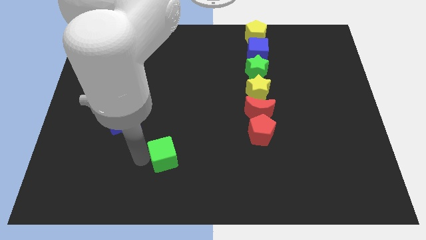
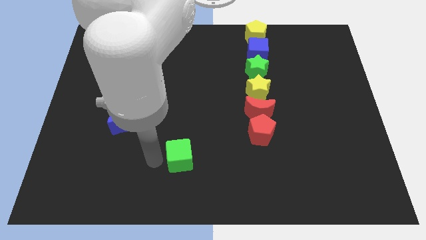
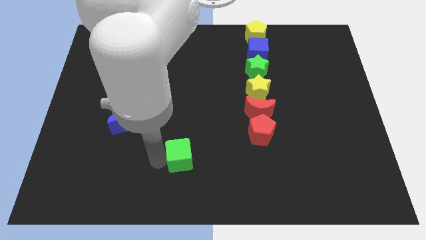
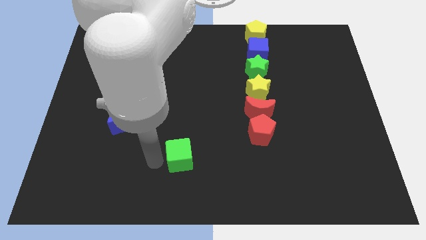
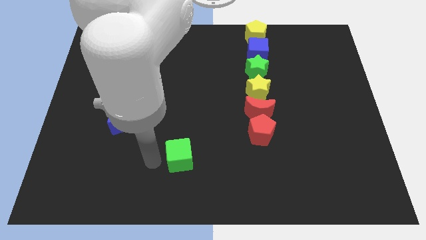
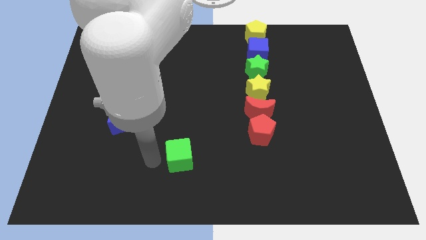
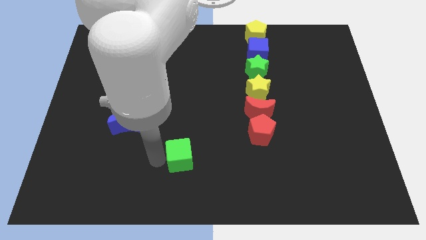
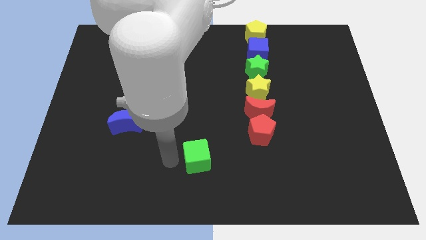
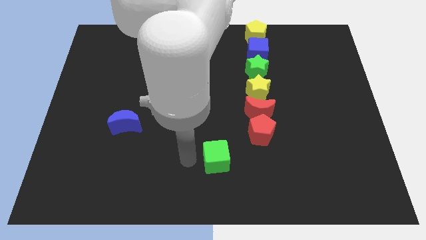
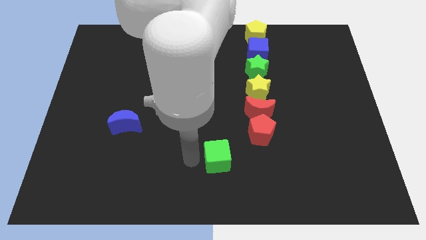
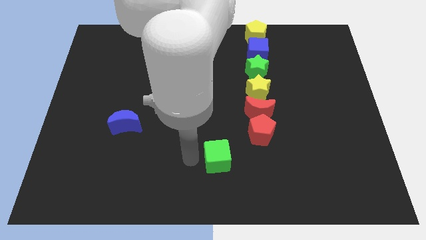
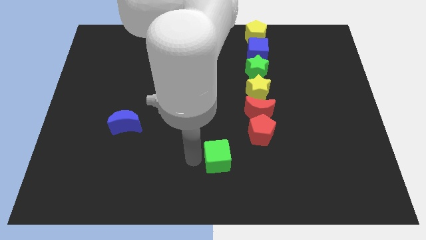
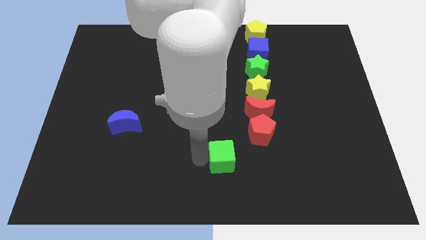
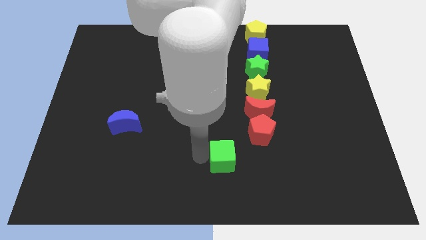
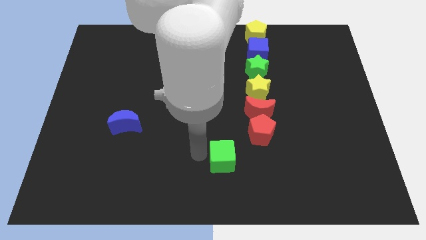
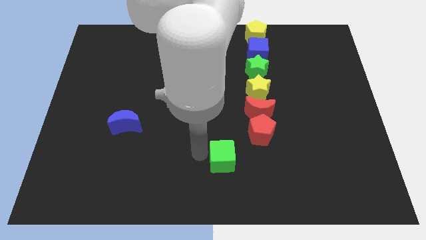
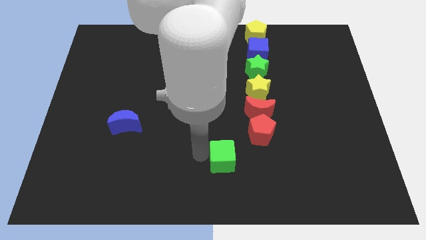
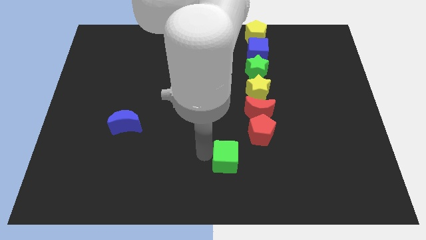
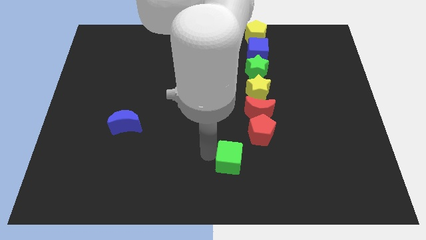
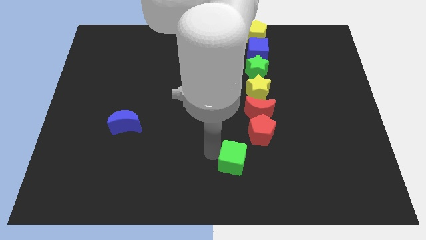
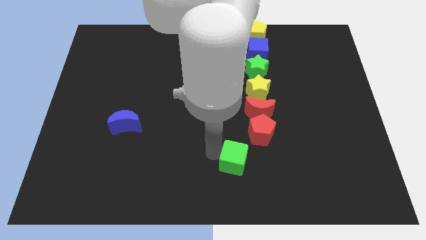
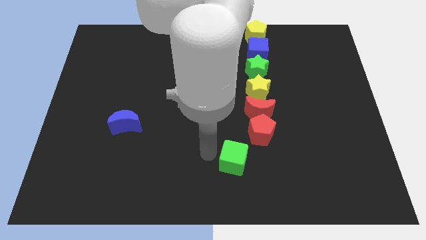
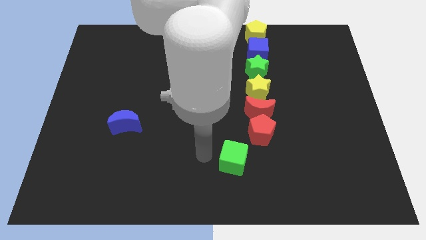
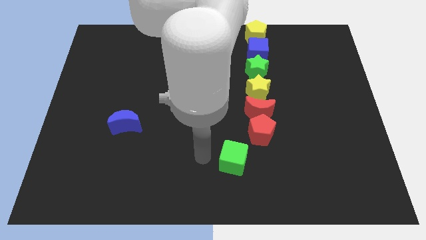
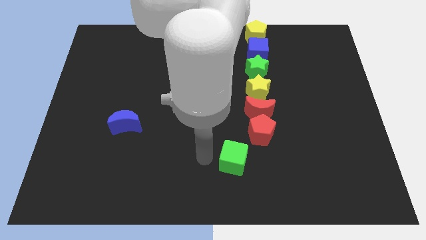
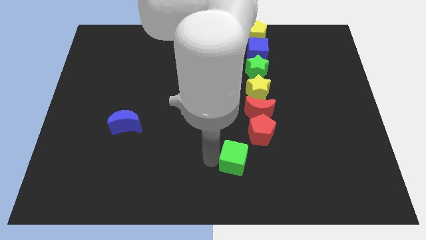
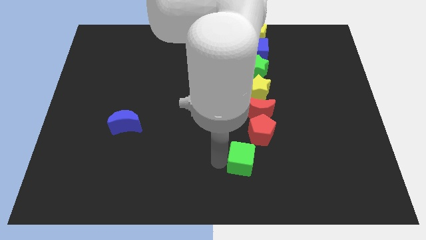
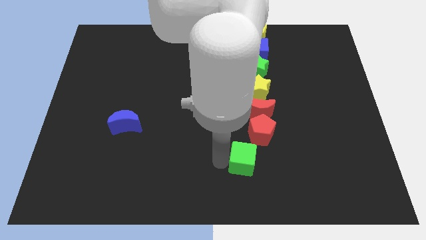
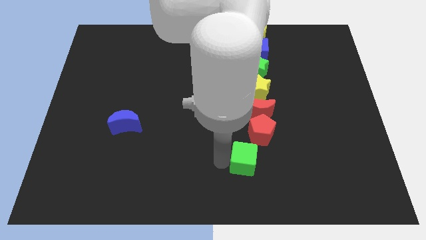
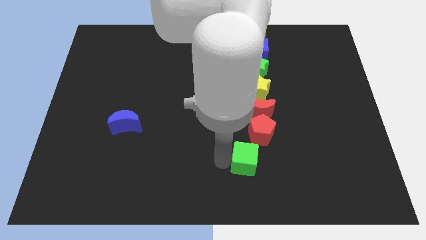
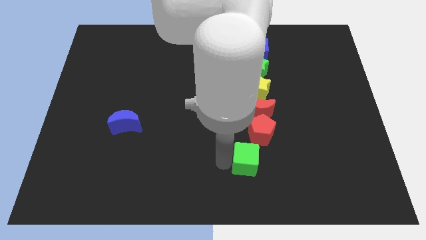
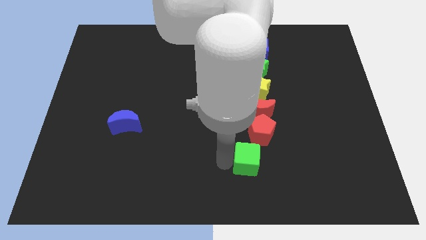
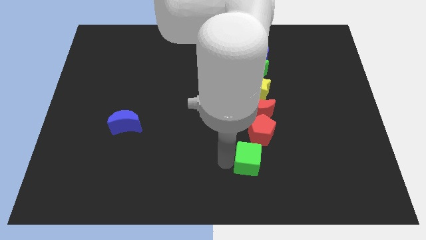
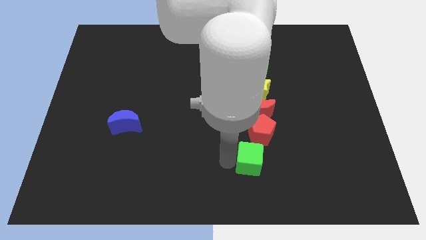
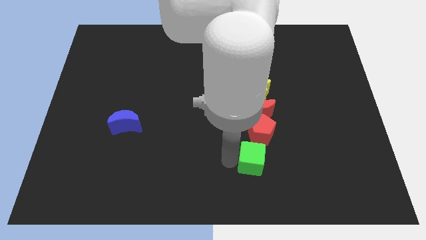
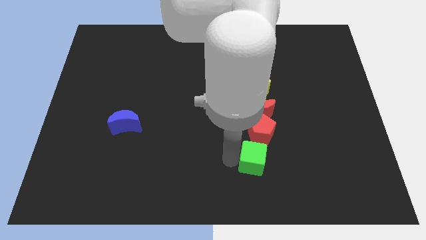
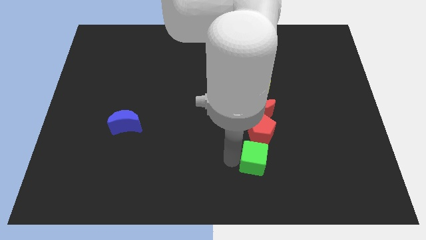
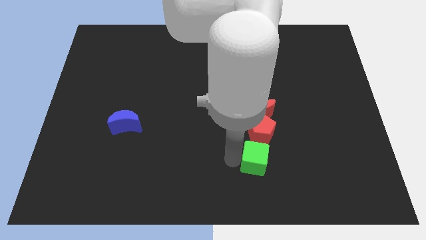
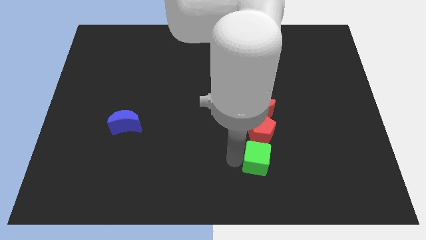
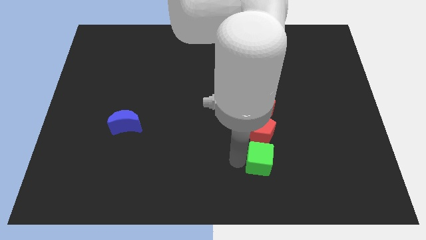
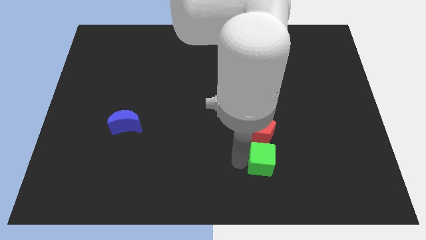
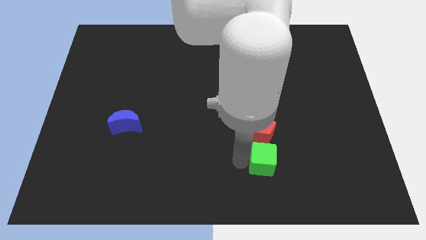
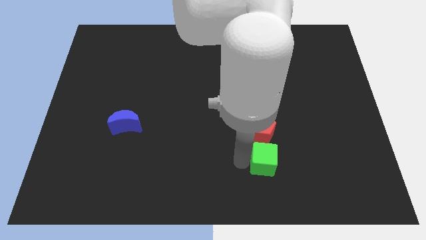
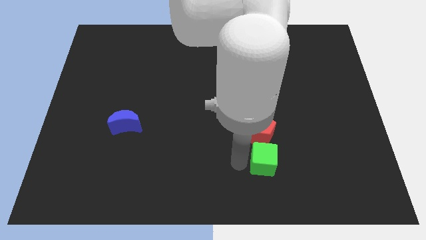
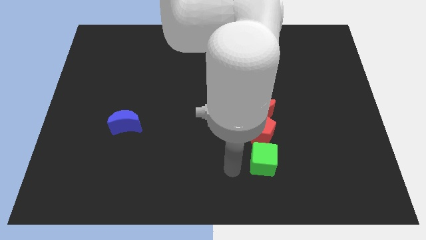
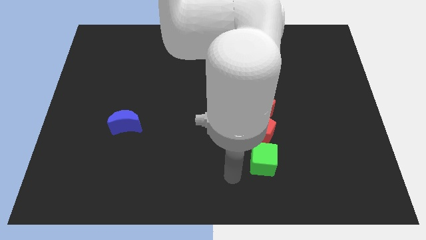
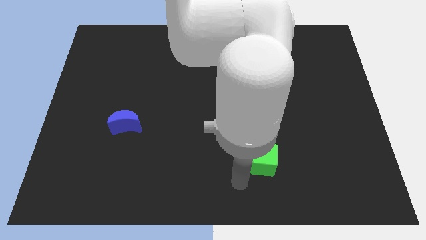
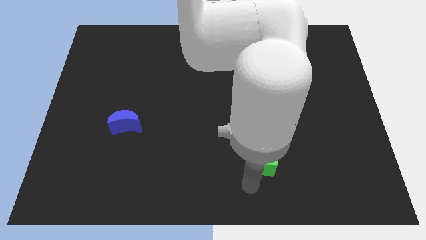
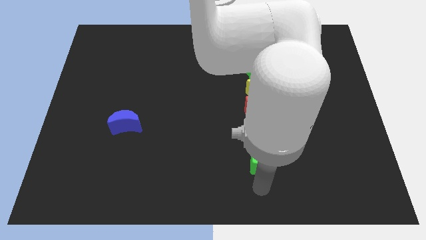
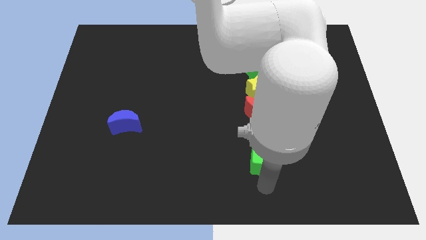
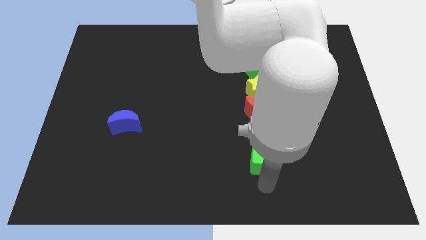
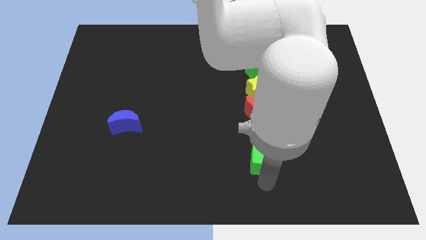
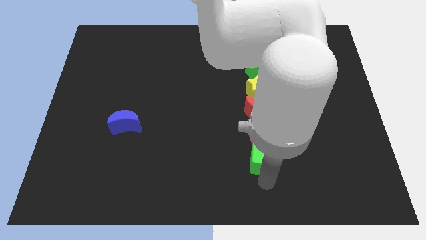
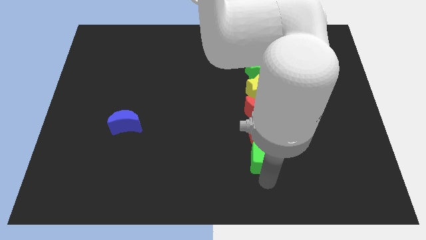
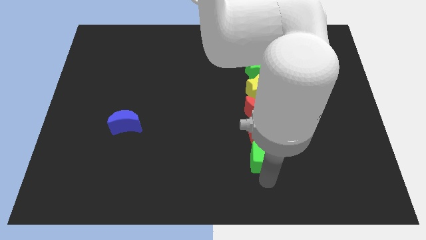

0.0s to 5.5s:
place the green cube below the red pentagon

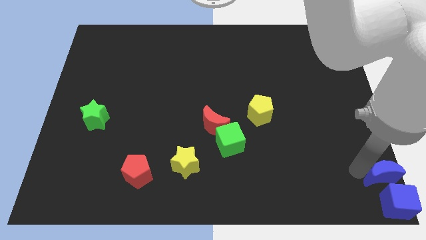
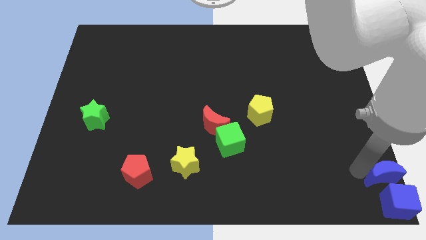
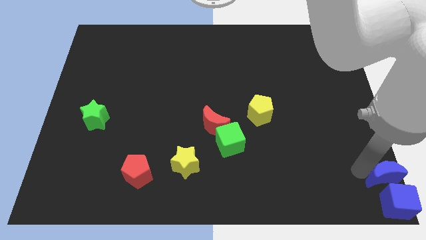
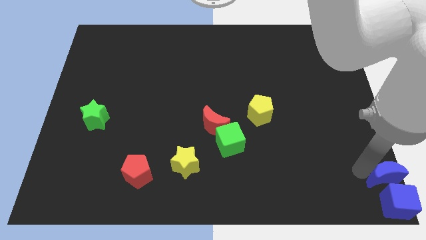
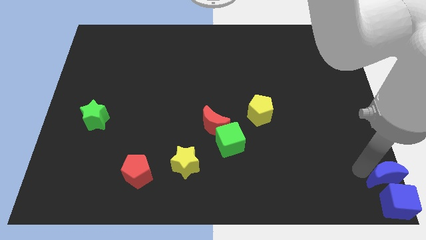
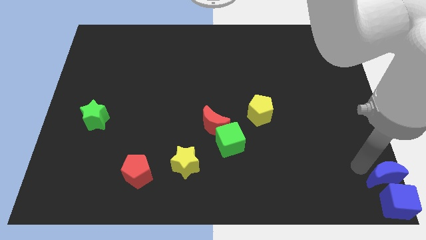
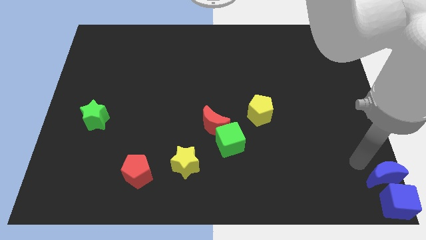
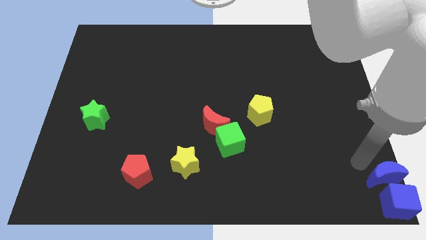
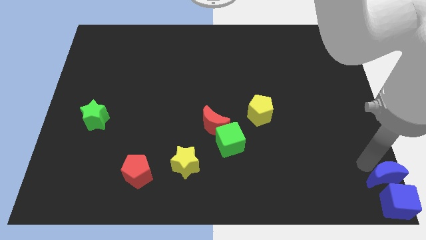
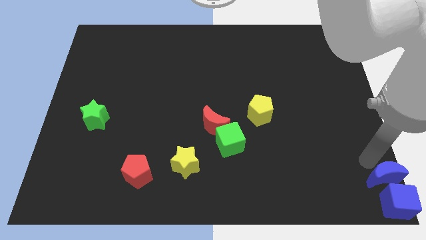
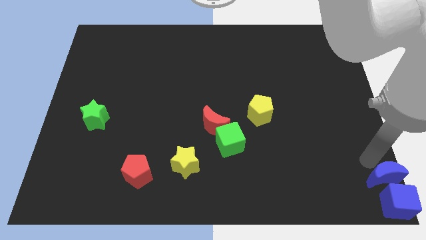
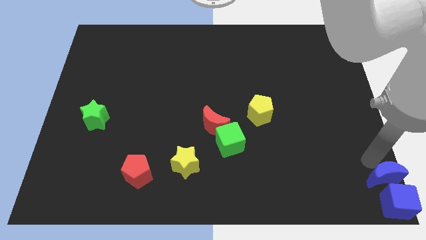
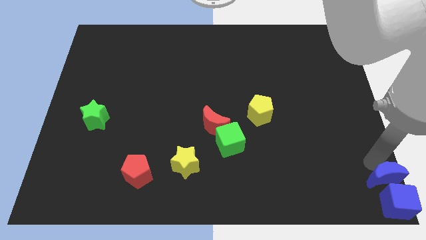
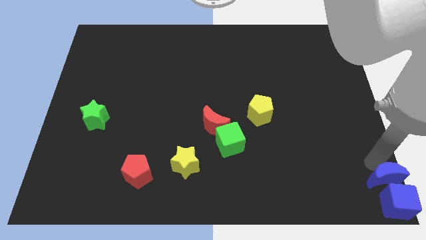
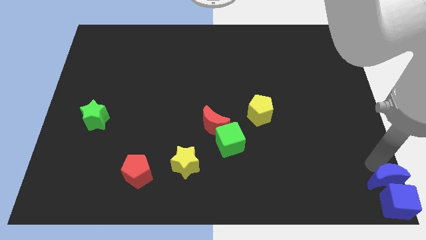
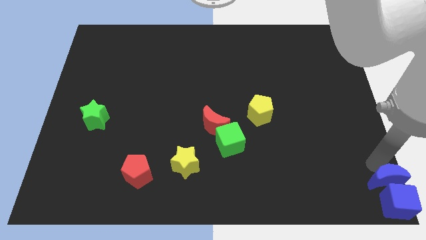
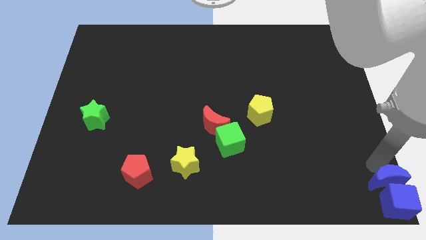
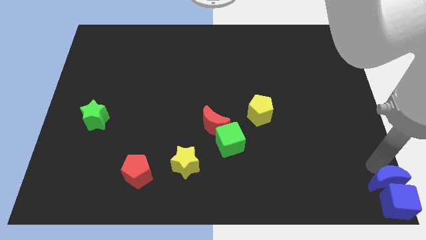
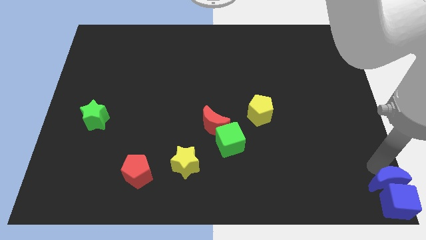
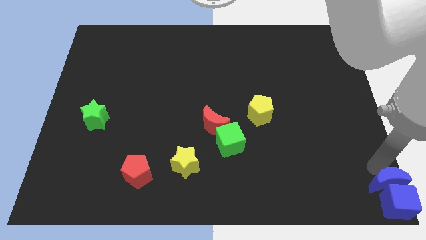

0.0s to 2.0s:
push the blue moon into the blue cube

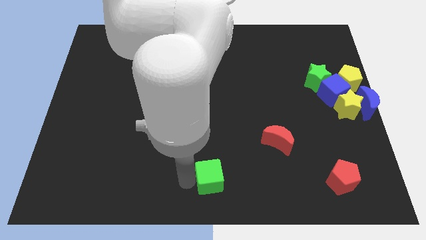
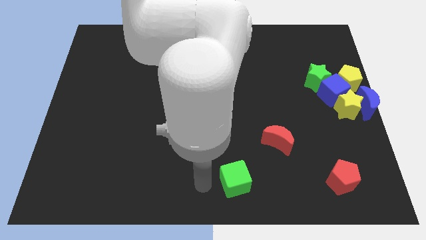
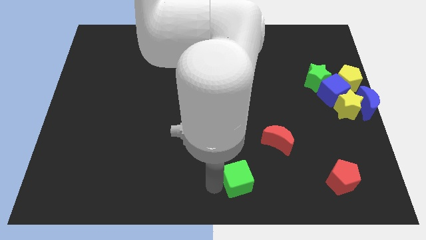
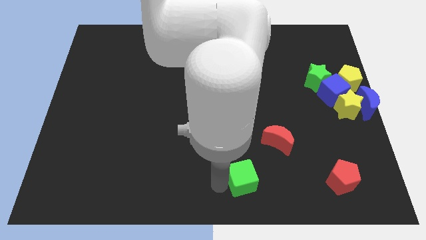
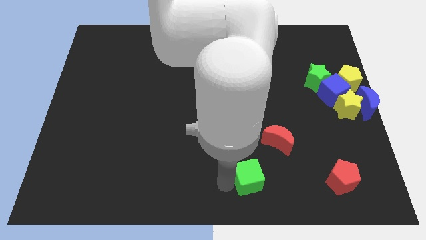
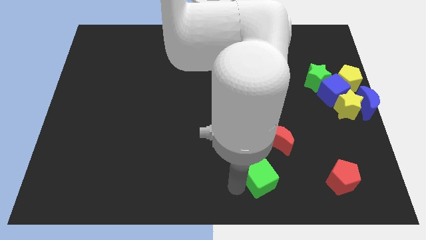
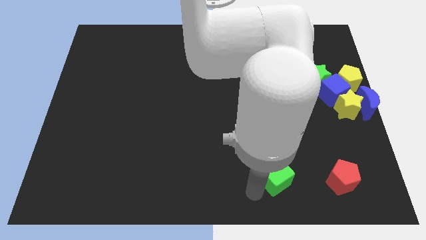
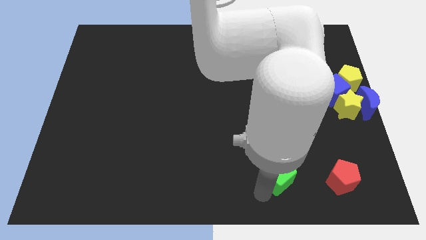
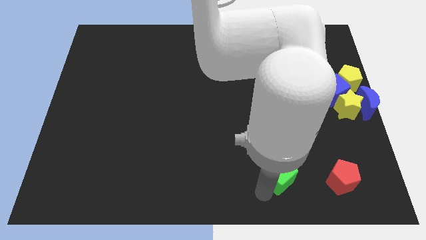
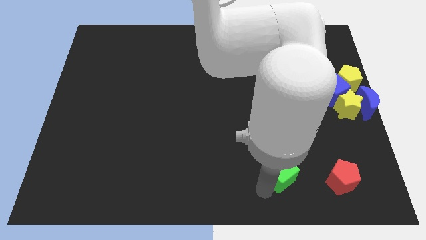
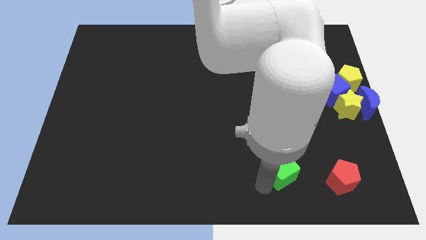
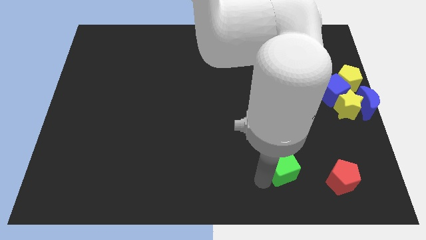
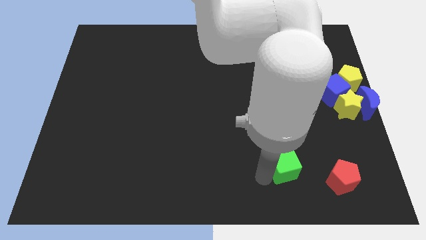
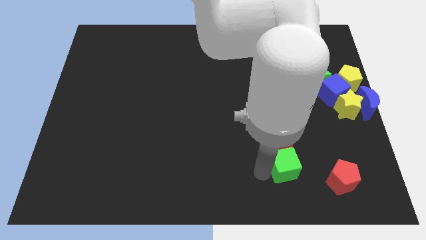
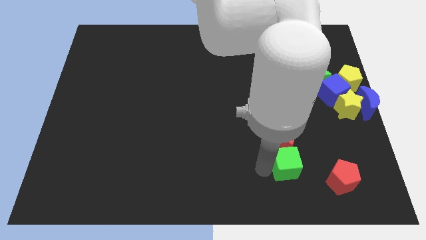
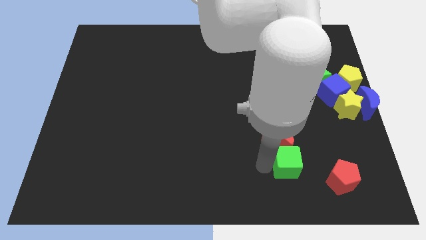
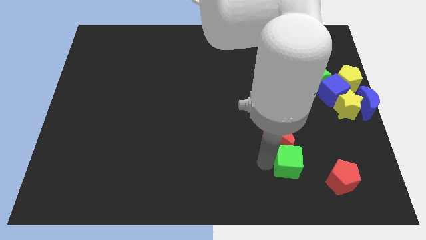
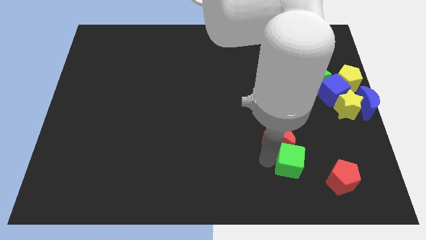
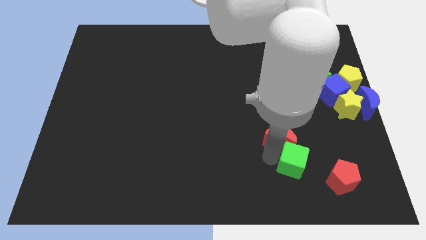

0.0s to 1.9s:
move the green cube into the red moon
